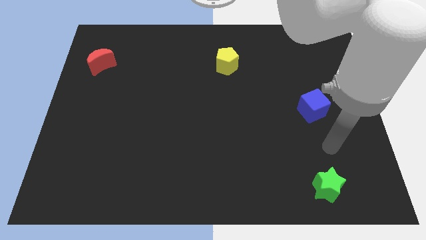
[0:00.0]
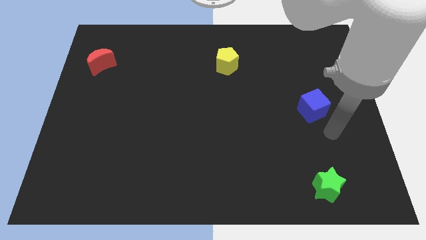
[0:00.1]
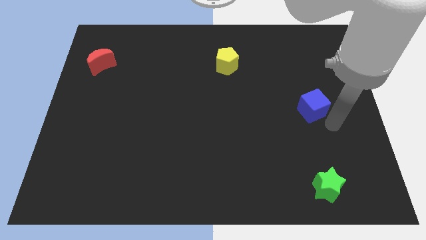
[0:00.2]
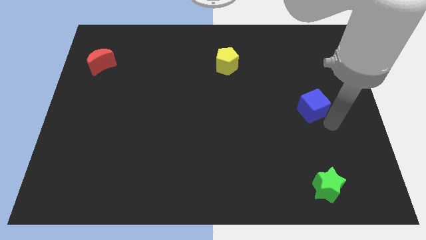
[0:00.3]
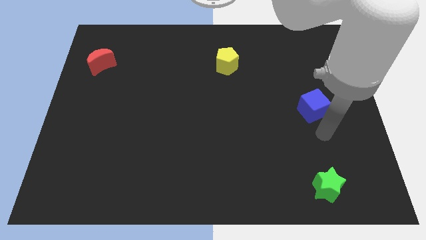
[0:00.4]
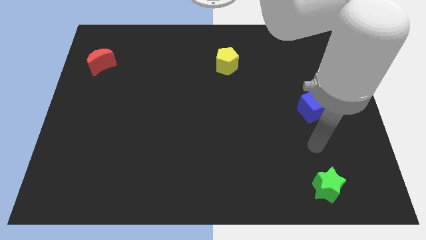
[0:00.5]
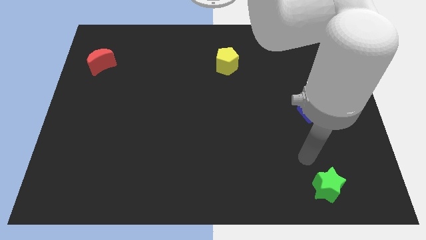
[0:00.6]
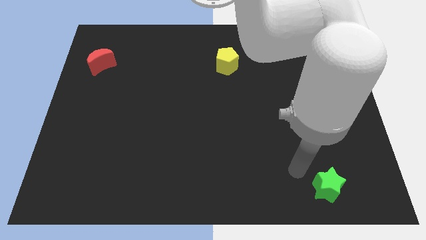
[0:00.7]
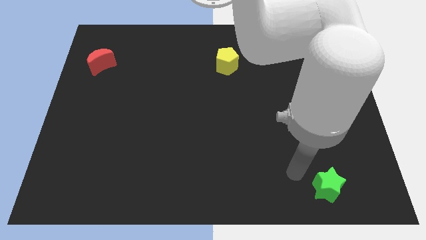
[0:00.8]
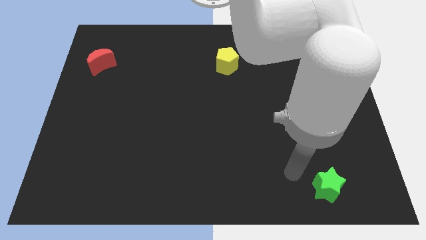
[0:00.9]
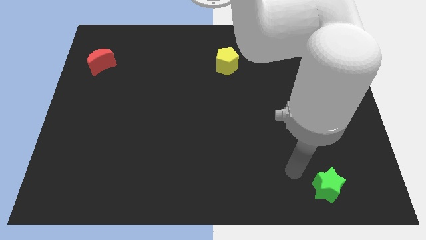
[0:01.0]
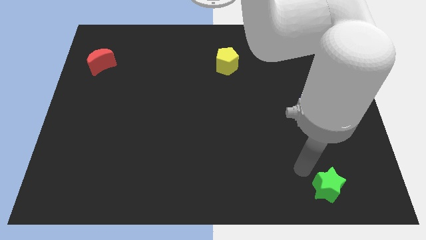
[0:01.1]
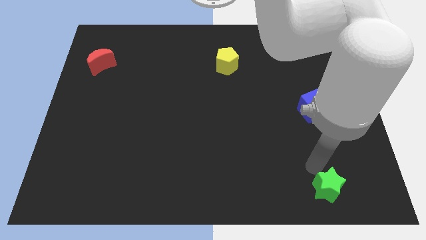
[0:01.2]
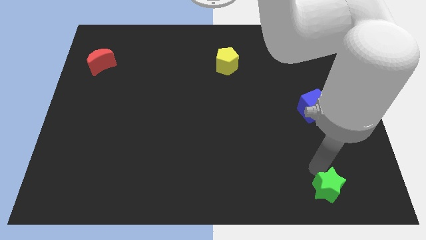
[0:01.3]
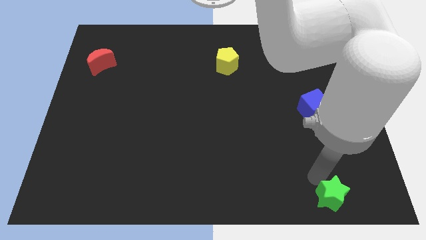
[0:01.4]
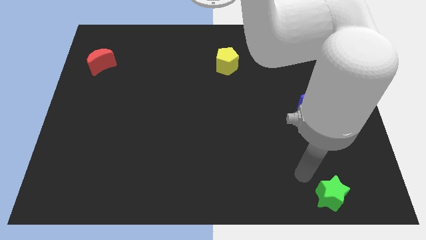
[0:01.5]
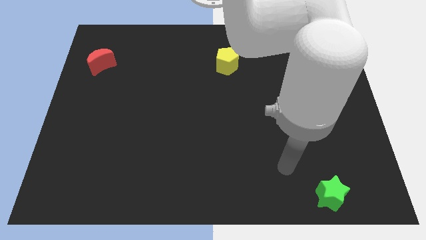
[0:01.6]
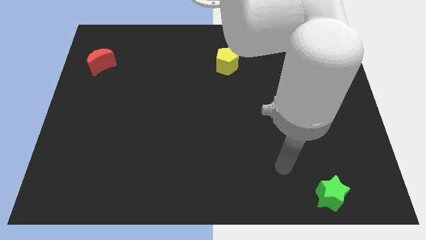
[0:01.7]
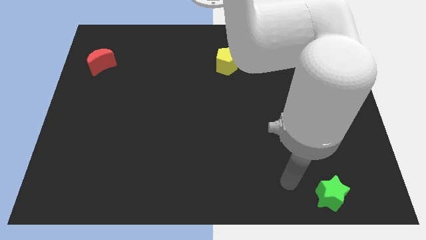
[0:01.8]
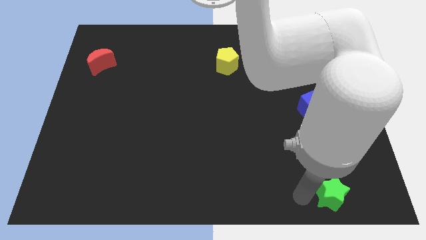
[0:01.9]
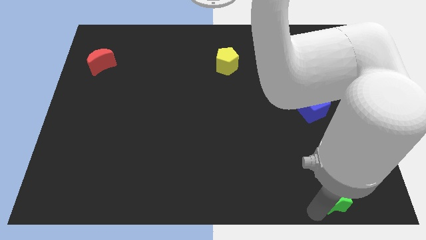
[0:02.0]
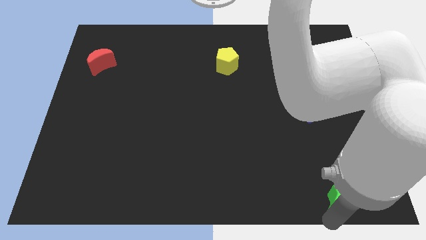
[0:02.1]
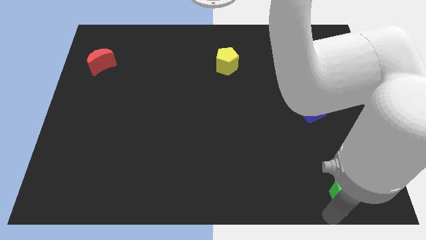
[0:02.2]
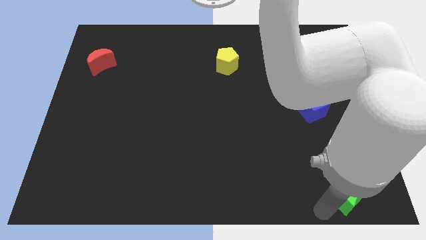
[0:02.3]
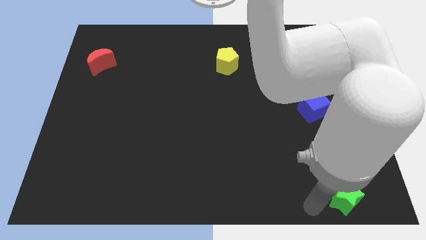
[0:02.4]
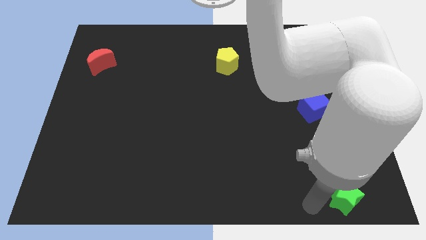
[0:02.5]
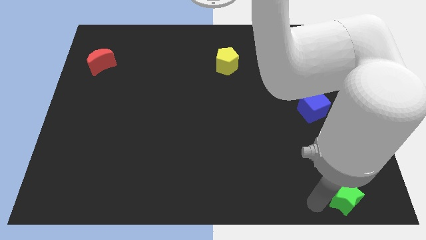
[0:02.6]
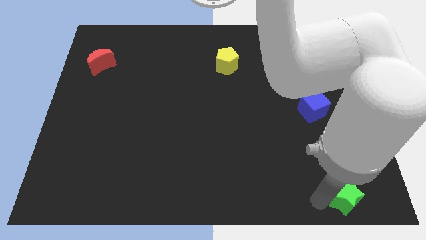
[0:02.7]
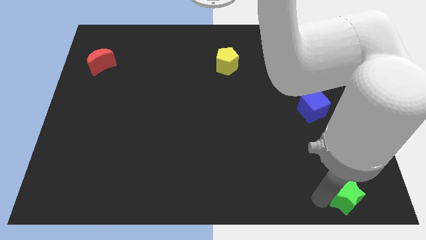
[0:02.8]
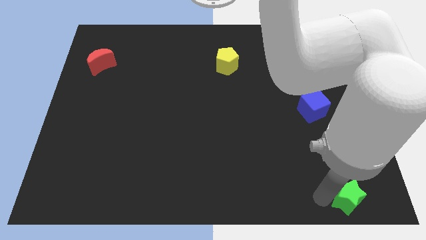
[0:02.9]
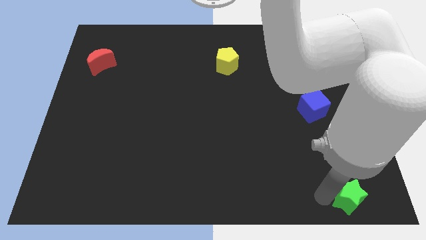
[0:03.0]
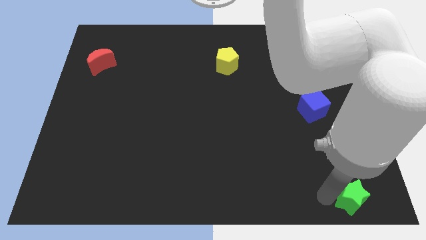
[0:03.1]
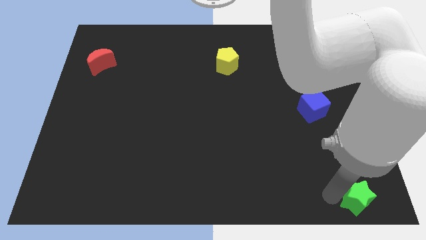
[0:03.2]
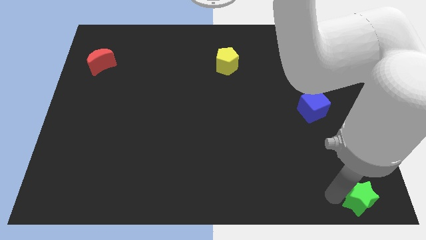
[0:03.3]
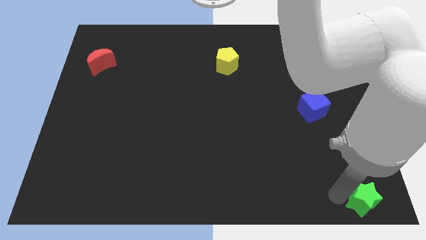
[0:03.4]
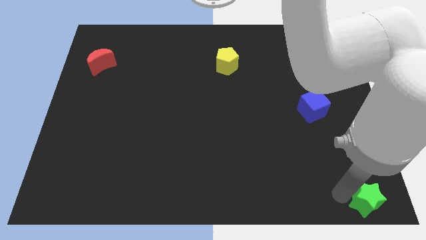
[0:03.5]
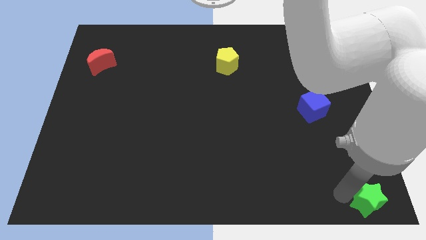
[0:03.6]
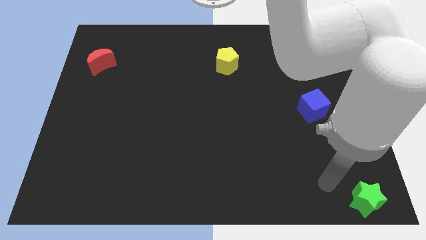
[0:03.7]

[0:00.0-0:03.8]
put the green star diagonally below the bottom side of the blue cube

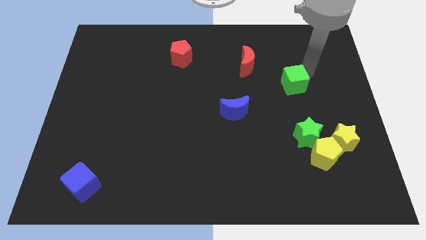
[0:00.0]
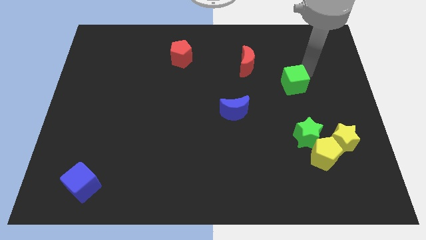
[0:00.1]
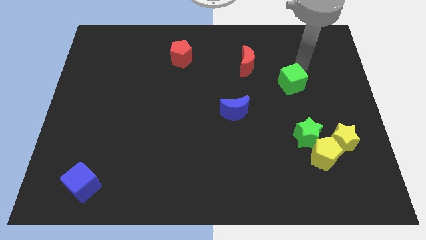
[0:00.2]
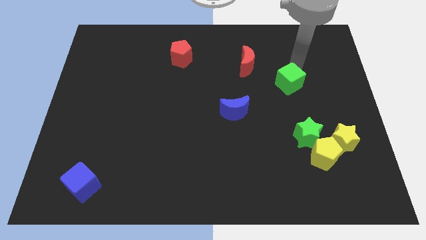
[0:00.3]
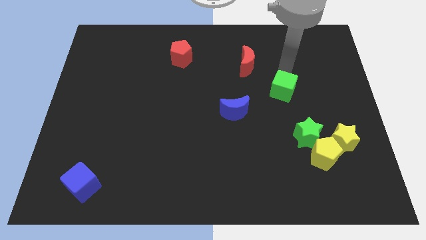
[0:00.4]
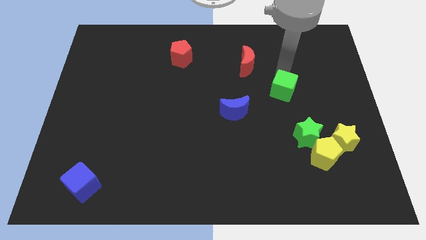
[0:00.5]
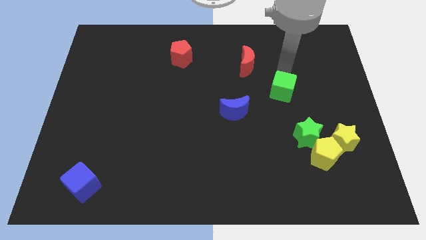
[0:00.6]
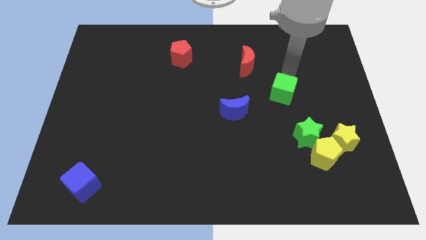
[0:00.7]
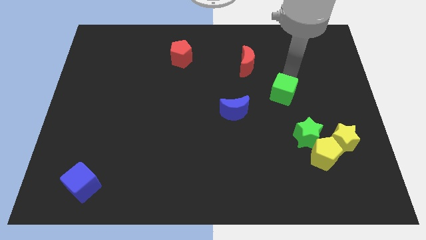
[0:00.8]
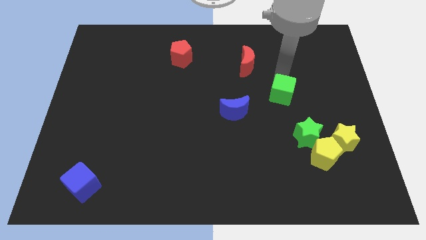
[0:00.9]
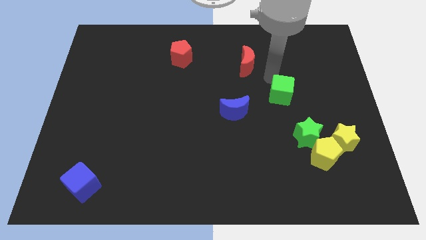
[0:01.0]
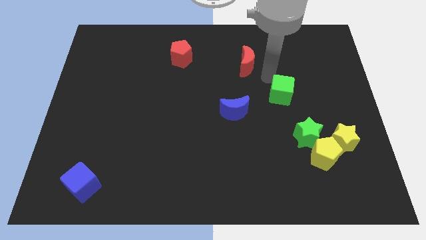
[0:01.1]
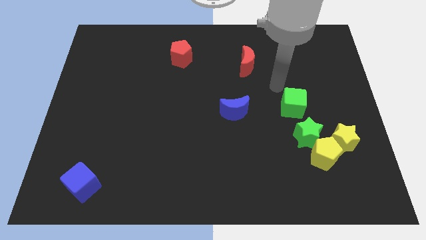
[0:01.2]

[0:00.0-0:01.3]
place the green cube in between the red moon and green star

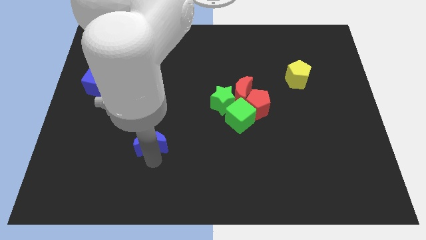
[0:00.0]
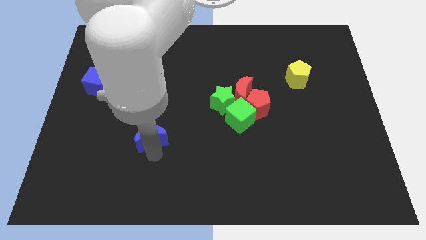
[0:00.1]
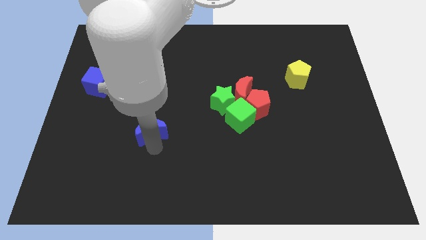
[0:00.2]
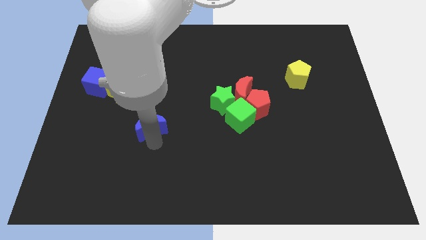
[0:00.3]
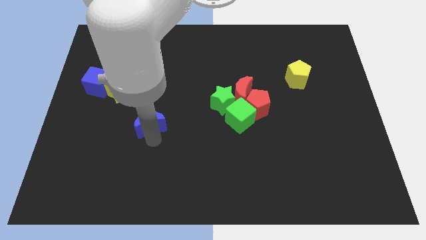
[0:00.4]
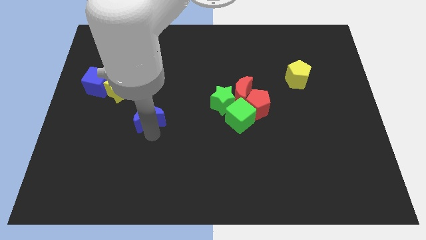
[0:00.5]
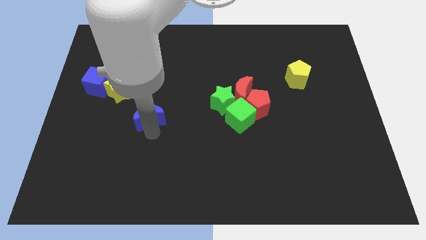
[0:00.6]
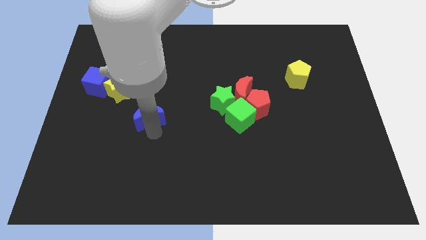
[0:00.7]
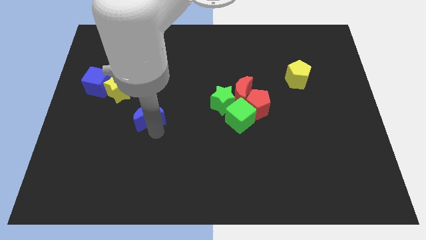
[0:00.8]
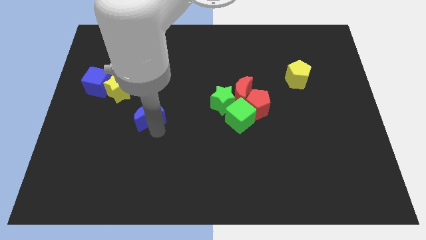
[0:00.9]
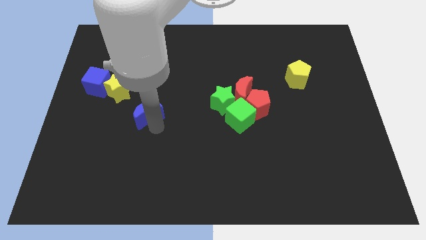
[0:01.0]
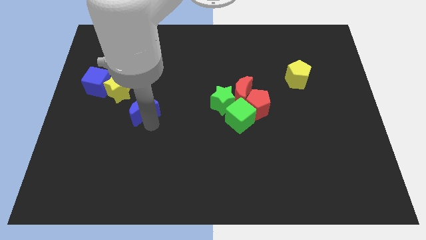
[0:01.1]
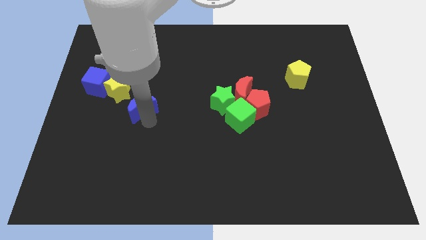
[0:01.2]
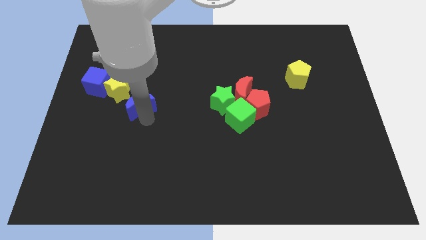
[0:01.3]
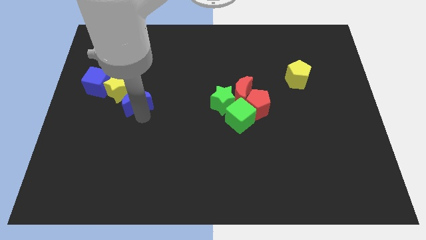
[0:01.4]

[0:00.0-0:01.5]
place the blue crescent to the left of the green star

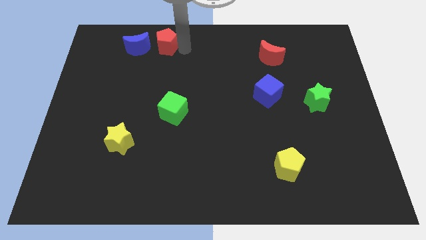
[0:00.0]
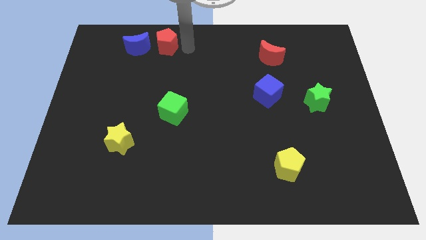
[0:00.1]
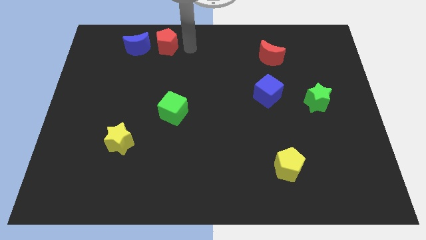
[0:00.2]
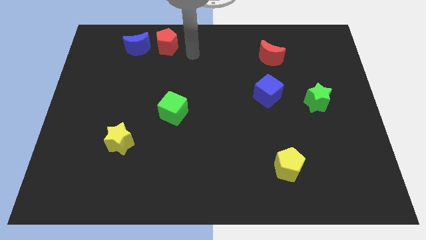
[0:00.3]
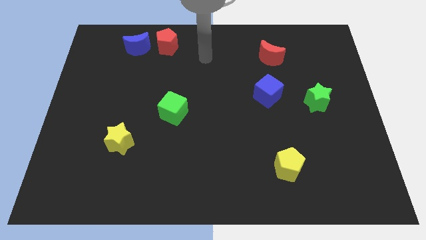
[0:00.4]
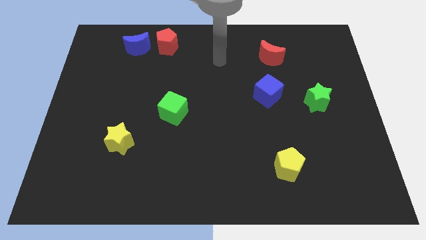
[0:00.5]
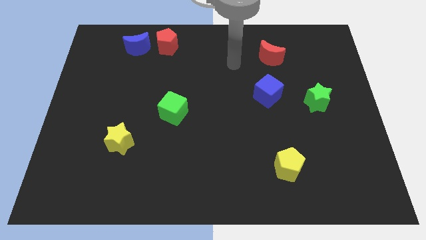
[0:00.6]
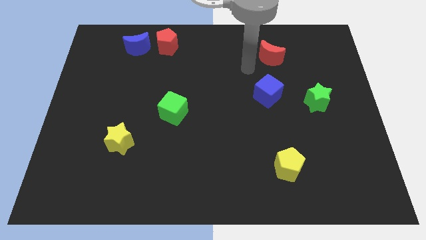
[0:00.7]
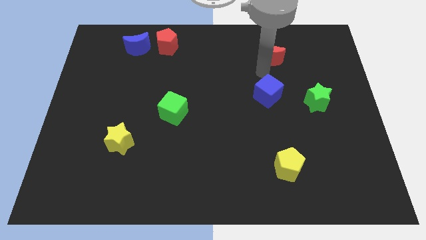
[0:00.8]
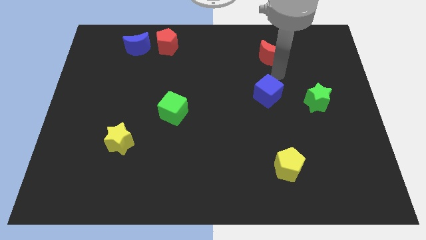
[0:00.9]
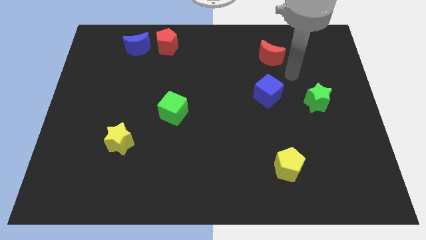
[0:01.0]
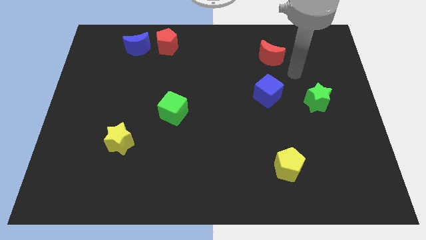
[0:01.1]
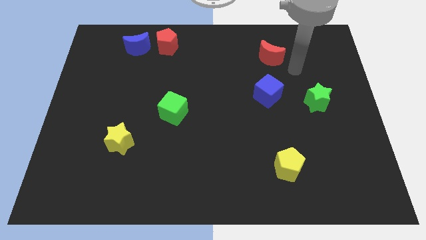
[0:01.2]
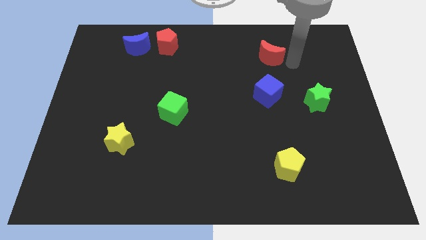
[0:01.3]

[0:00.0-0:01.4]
move your arm towards the red crescent

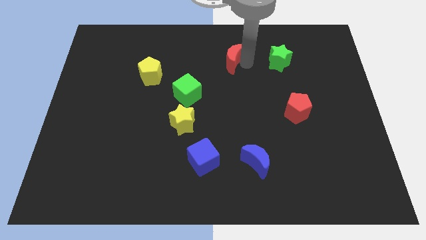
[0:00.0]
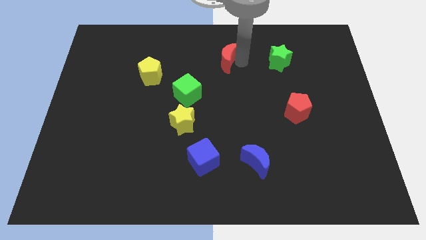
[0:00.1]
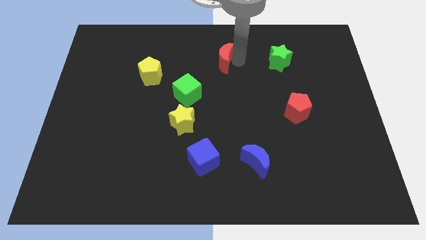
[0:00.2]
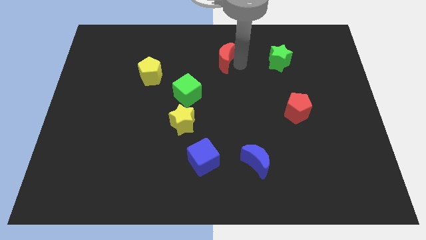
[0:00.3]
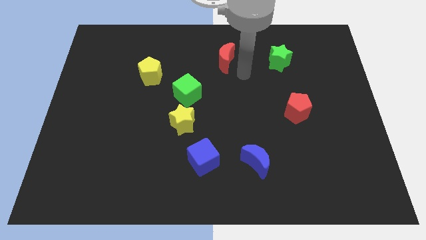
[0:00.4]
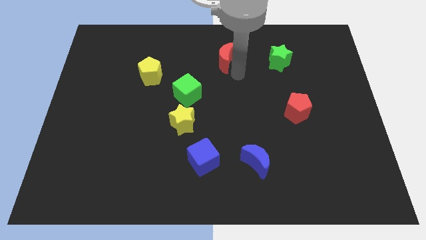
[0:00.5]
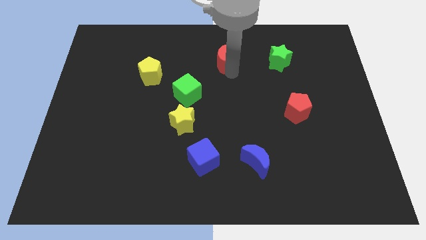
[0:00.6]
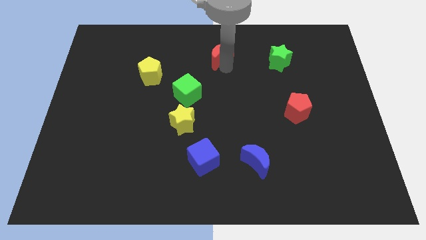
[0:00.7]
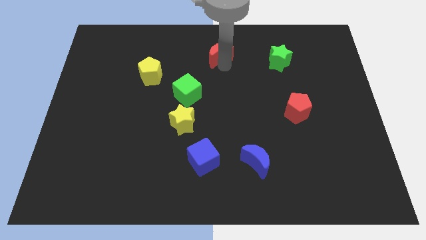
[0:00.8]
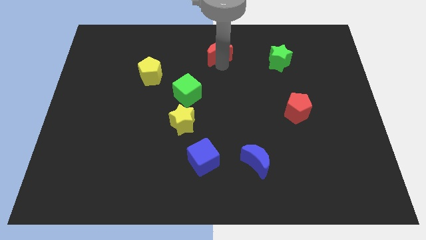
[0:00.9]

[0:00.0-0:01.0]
push the red moon towards upward
